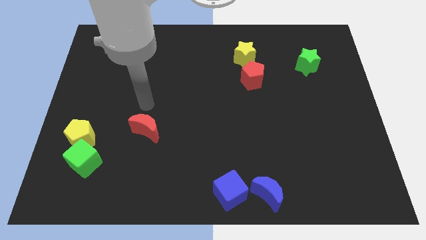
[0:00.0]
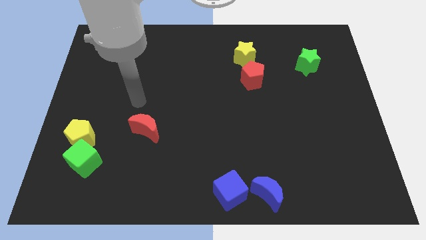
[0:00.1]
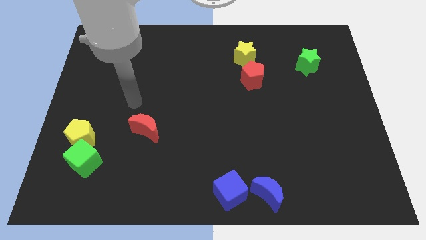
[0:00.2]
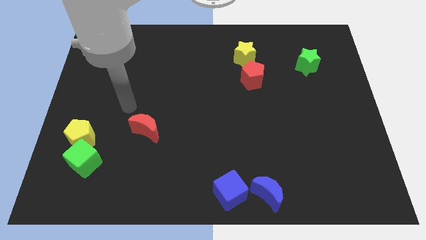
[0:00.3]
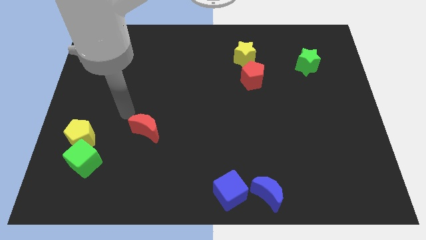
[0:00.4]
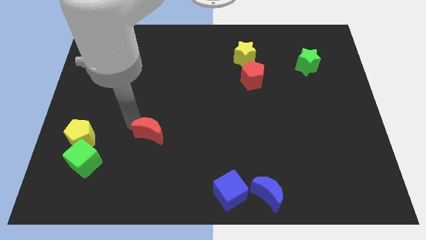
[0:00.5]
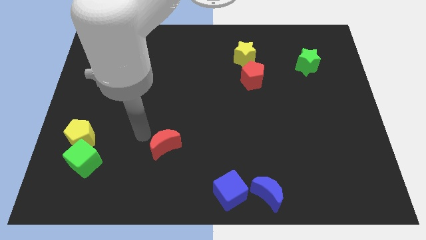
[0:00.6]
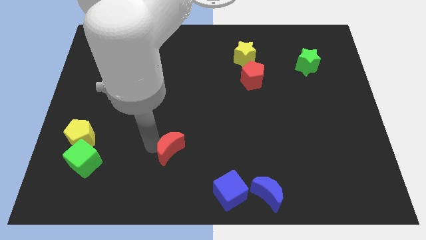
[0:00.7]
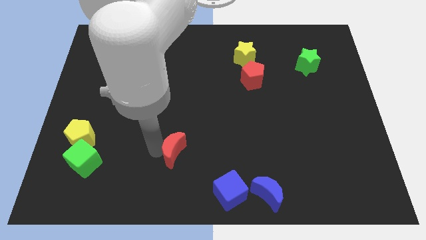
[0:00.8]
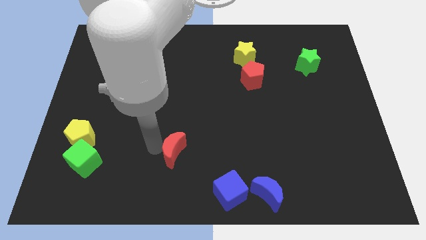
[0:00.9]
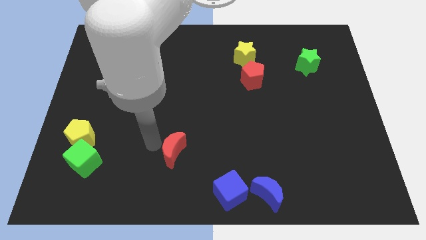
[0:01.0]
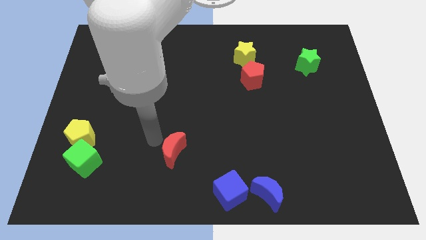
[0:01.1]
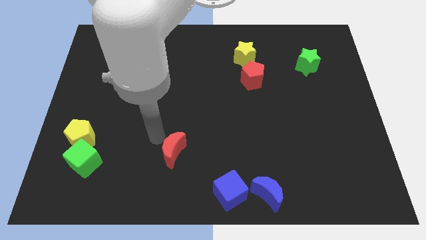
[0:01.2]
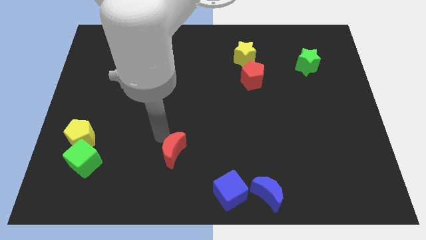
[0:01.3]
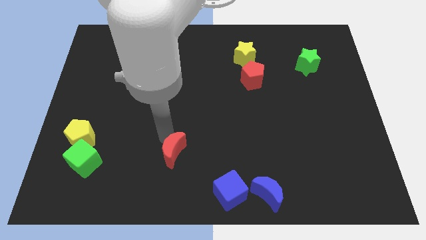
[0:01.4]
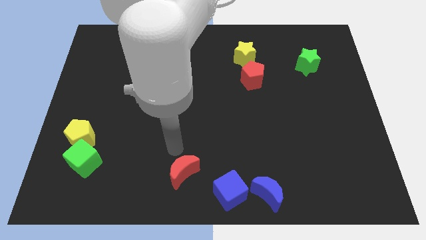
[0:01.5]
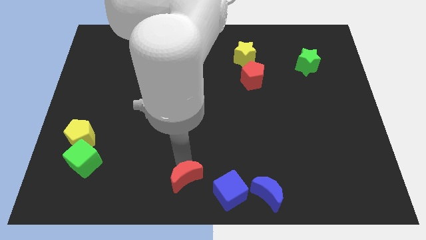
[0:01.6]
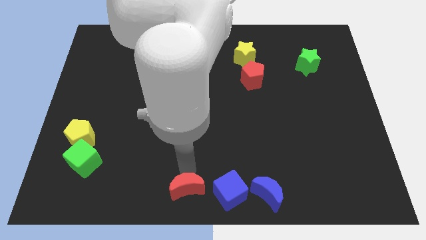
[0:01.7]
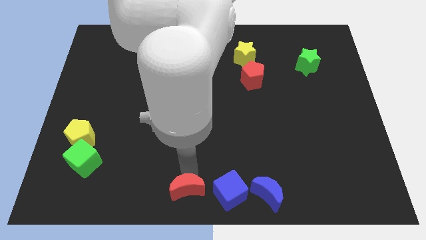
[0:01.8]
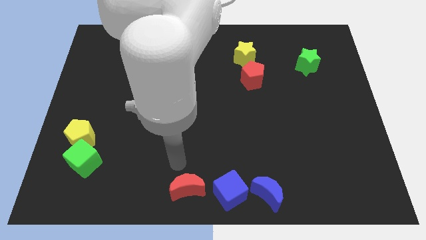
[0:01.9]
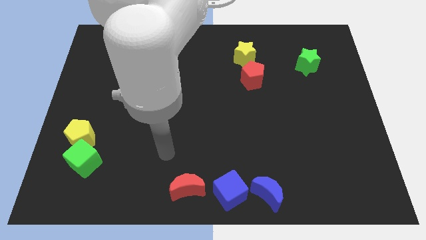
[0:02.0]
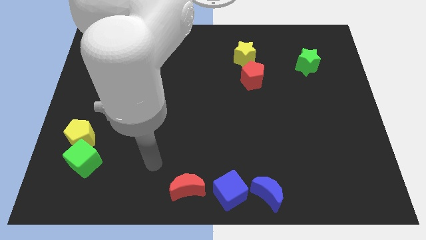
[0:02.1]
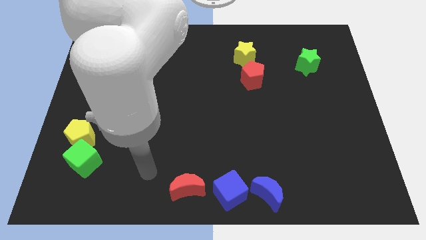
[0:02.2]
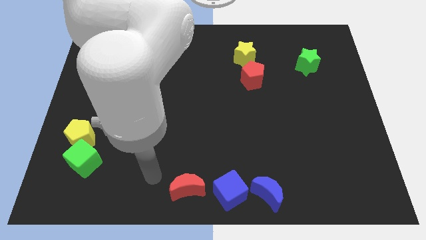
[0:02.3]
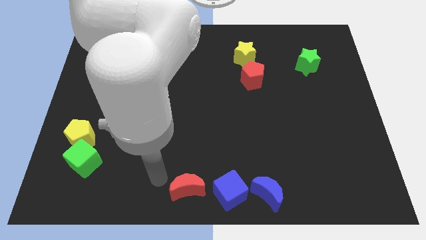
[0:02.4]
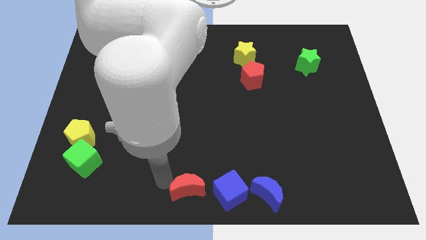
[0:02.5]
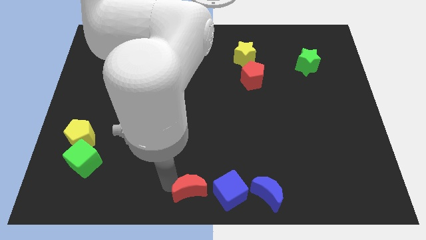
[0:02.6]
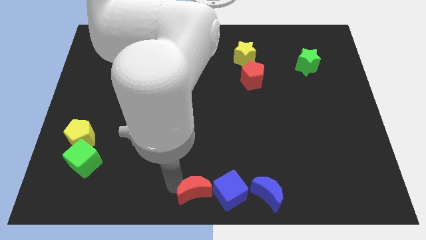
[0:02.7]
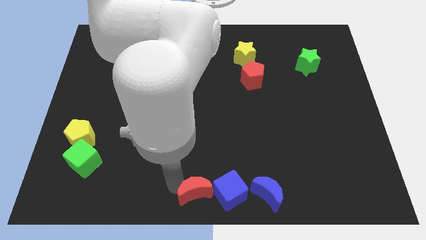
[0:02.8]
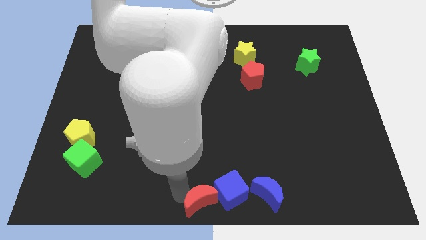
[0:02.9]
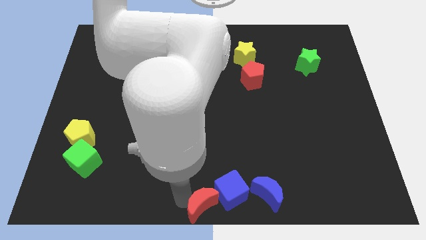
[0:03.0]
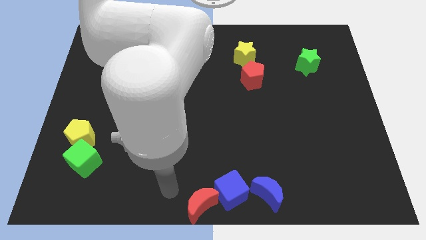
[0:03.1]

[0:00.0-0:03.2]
place the red crescent at the bottom center

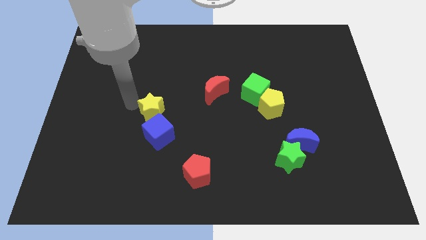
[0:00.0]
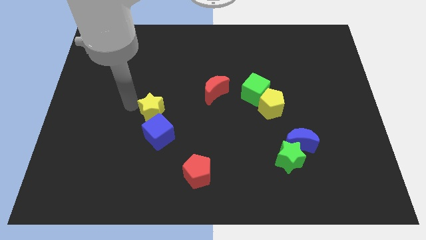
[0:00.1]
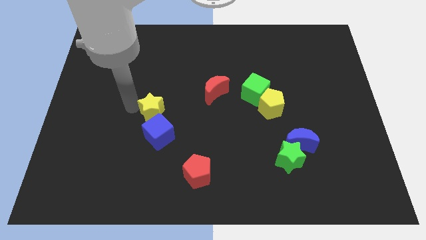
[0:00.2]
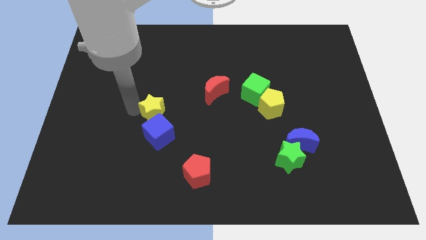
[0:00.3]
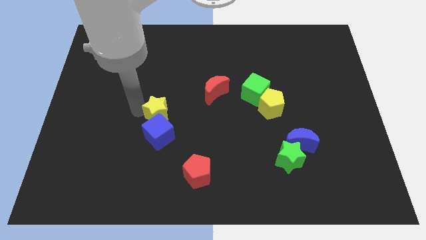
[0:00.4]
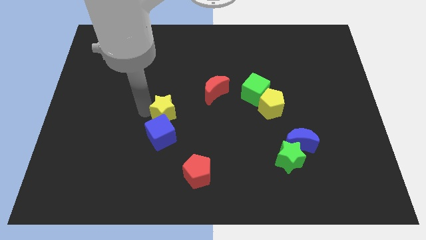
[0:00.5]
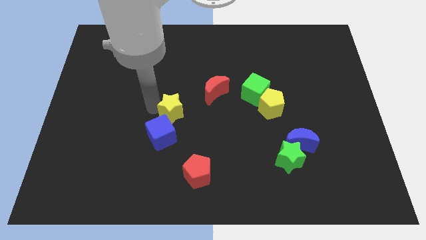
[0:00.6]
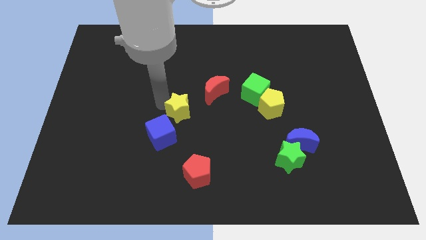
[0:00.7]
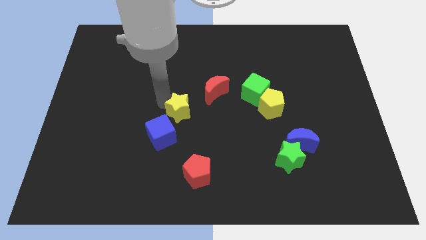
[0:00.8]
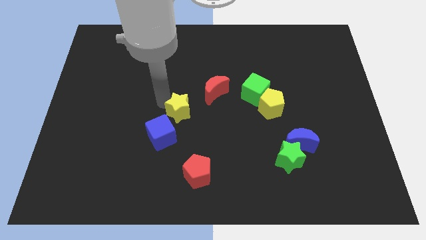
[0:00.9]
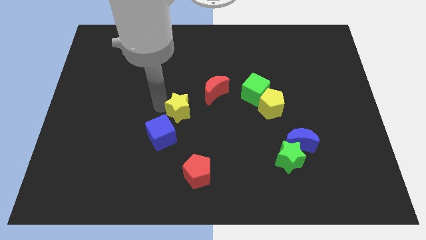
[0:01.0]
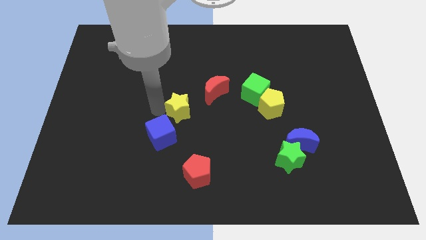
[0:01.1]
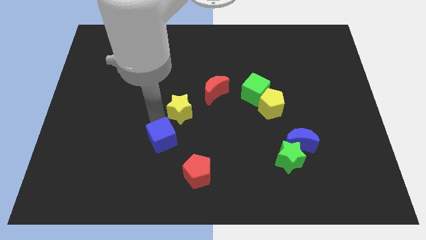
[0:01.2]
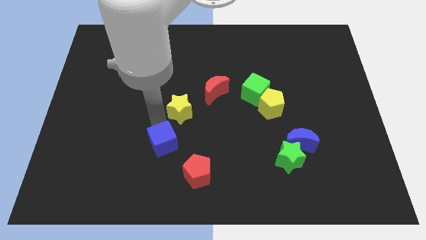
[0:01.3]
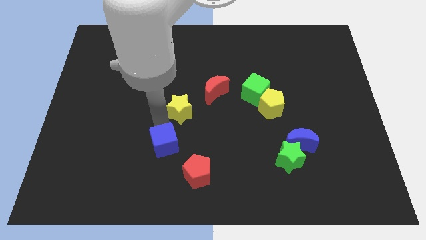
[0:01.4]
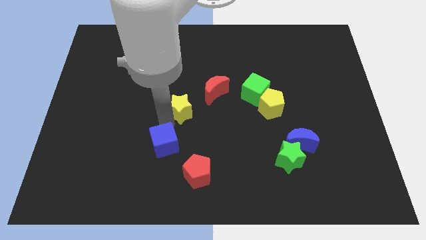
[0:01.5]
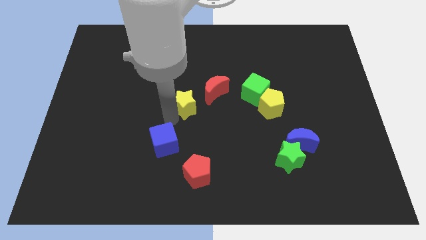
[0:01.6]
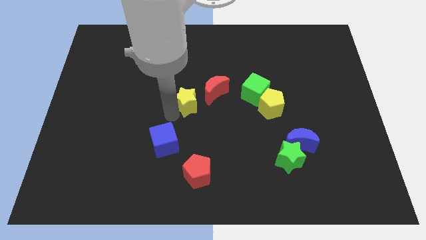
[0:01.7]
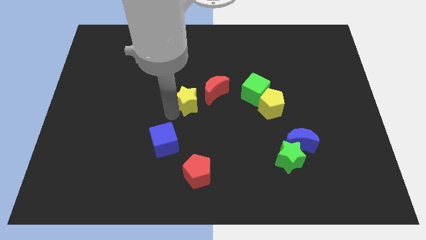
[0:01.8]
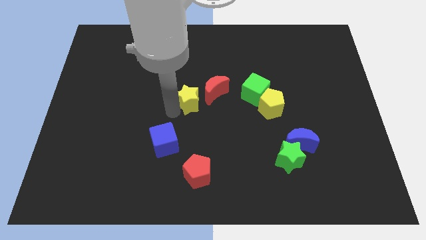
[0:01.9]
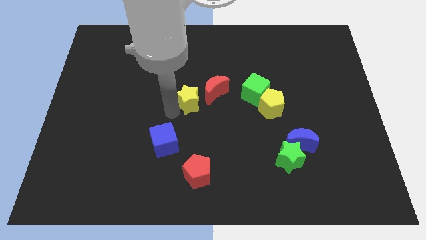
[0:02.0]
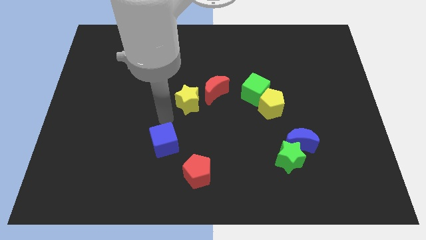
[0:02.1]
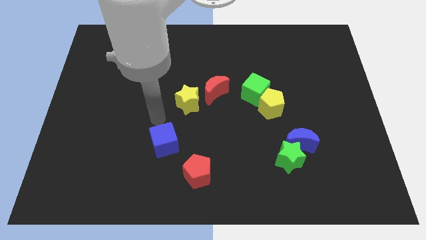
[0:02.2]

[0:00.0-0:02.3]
place the yellow star in between red moon and blue cube

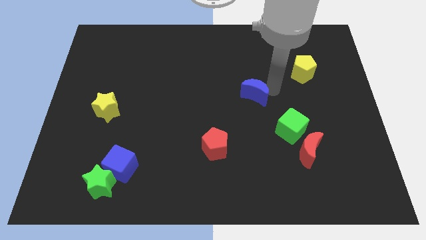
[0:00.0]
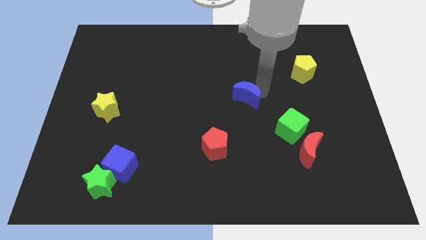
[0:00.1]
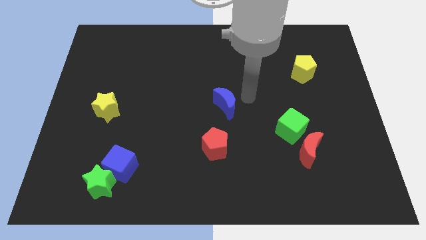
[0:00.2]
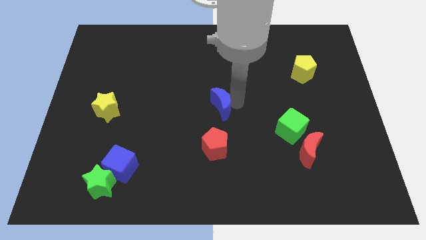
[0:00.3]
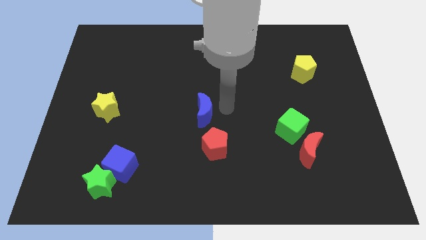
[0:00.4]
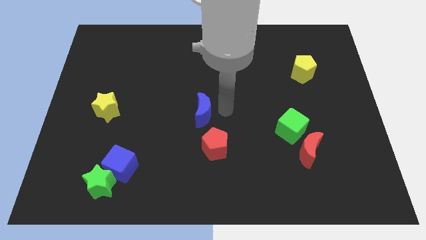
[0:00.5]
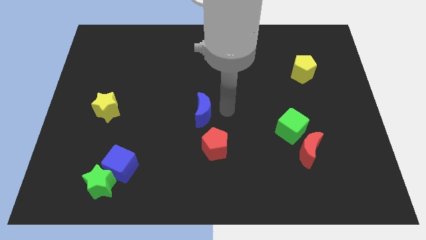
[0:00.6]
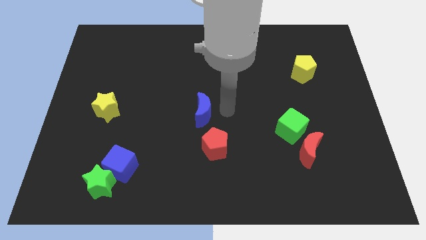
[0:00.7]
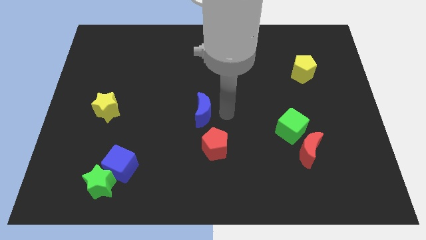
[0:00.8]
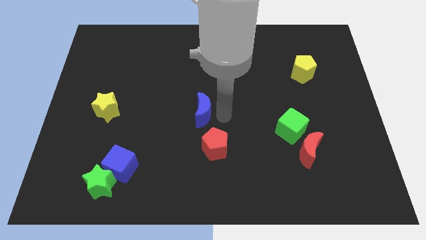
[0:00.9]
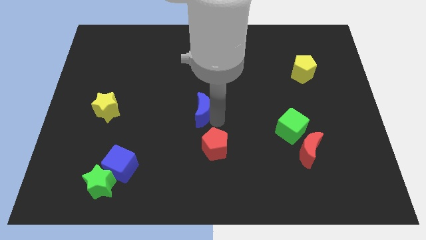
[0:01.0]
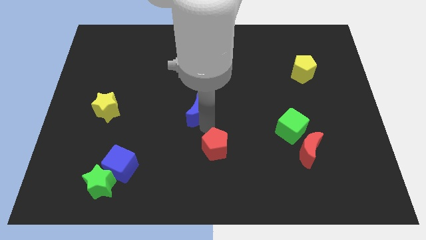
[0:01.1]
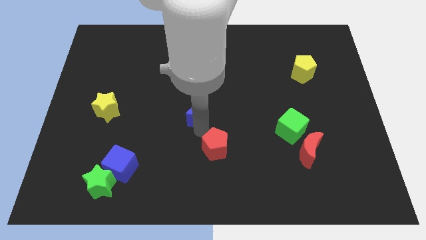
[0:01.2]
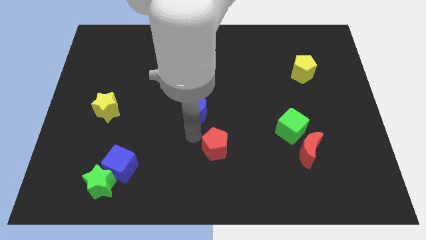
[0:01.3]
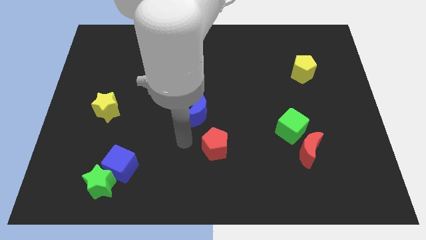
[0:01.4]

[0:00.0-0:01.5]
put the blue moon horizontally to the right side of the yellow star

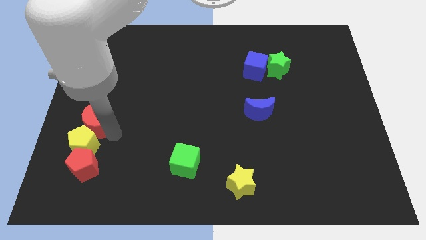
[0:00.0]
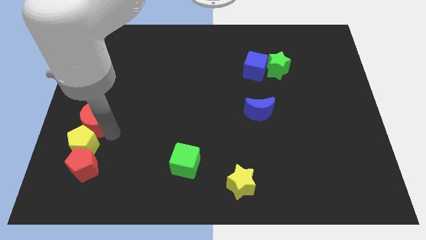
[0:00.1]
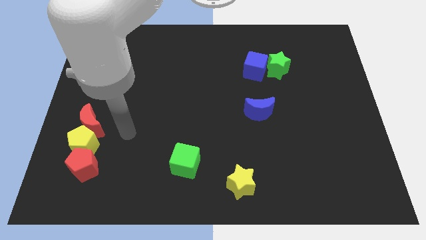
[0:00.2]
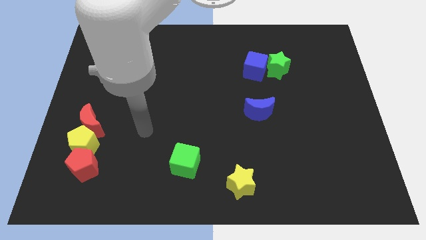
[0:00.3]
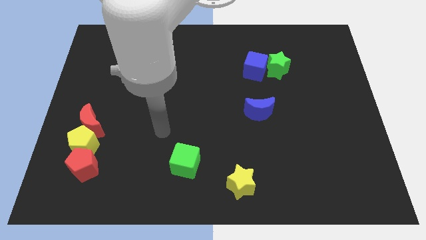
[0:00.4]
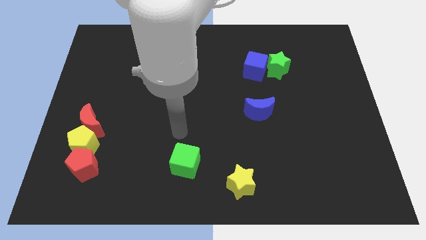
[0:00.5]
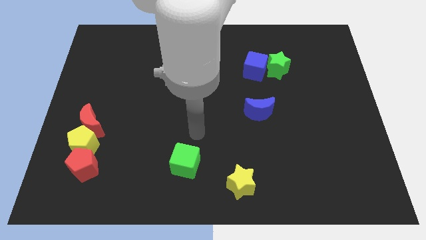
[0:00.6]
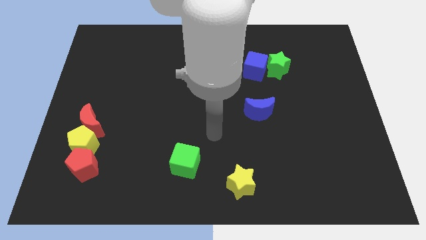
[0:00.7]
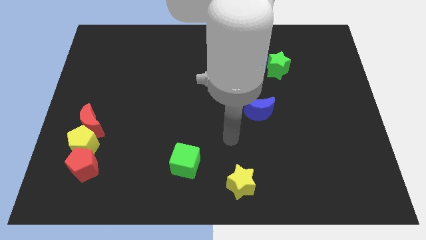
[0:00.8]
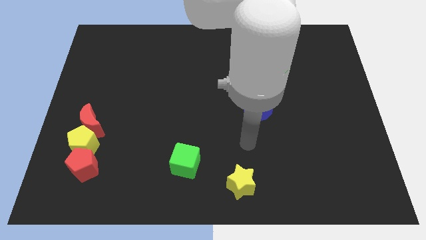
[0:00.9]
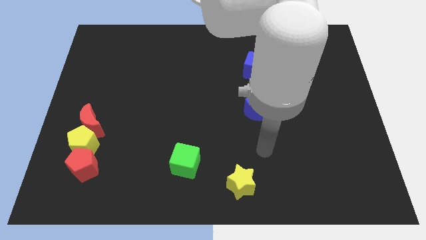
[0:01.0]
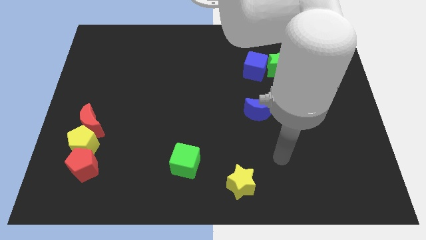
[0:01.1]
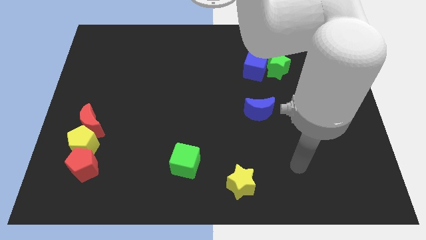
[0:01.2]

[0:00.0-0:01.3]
move your arm away frim red crescent

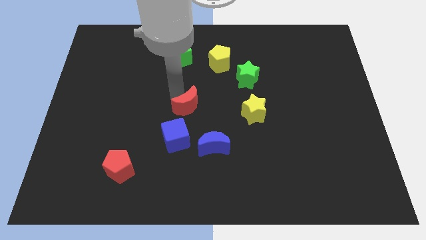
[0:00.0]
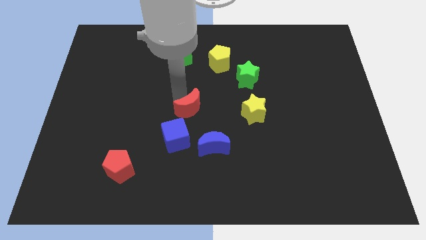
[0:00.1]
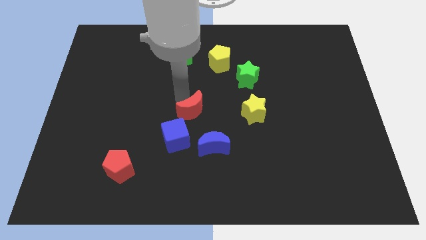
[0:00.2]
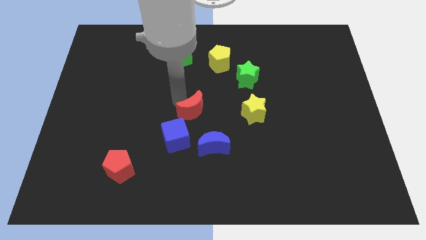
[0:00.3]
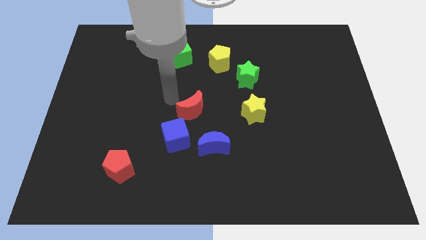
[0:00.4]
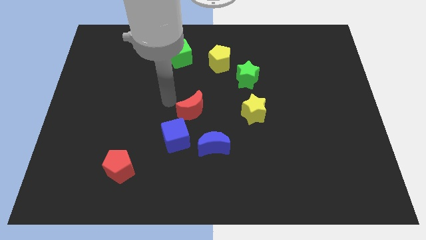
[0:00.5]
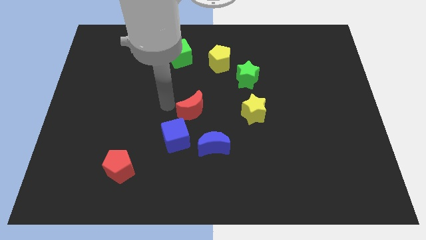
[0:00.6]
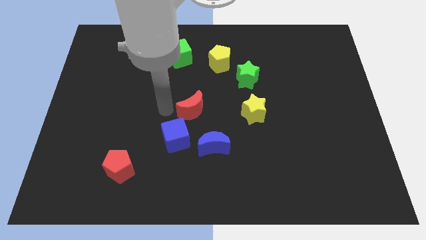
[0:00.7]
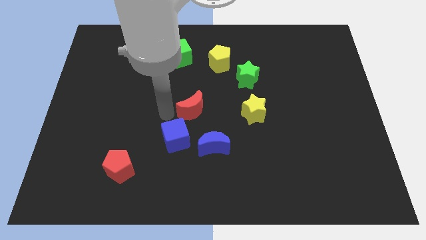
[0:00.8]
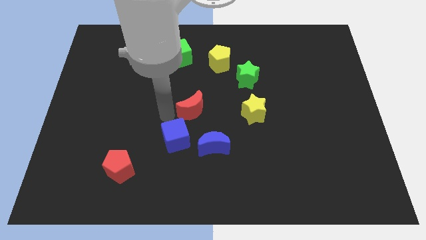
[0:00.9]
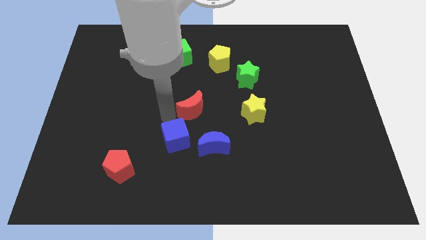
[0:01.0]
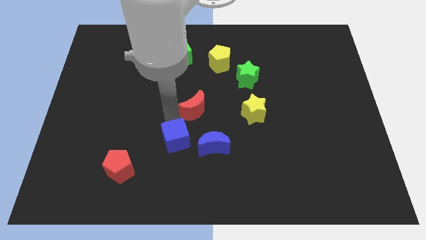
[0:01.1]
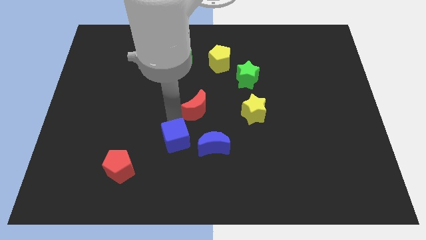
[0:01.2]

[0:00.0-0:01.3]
touch the red crescent with your arm
